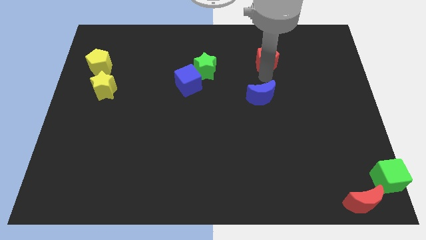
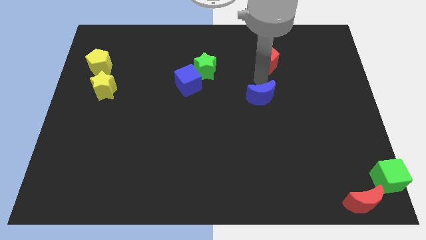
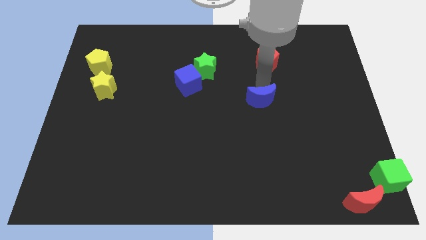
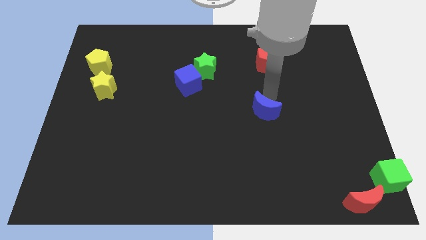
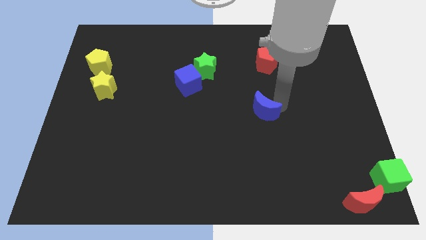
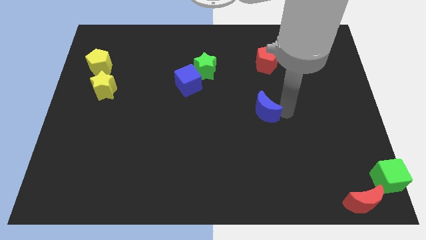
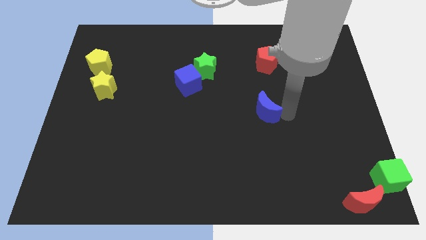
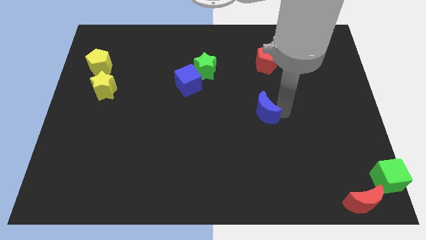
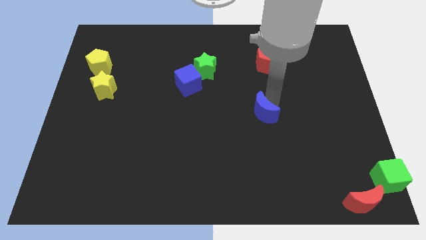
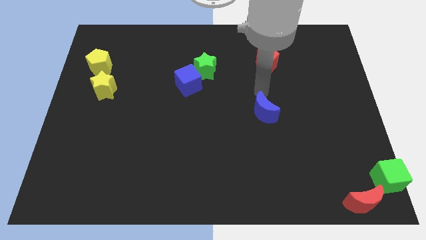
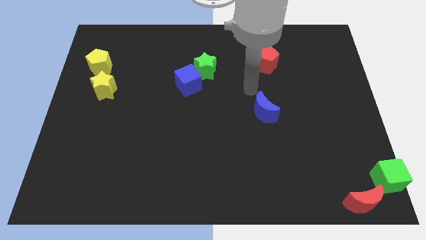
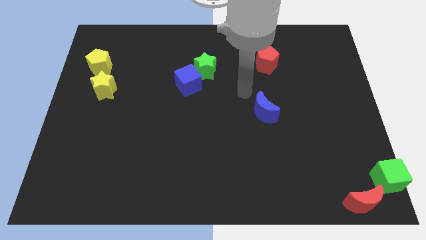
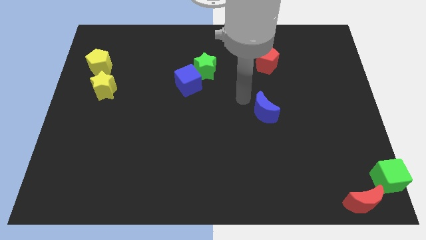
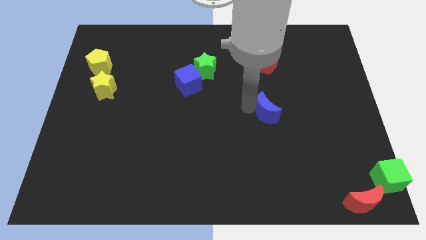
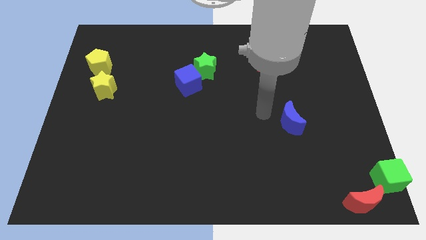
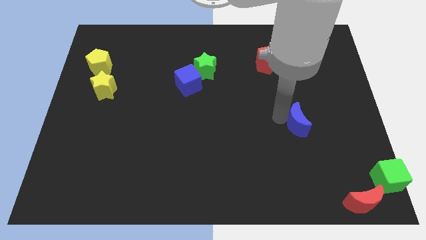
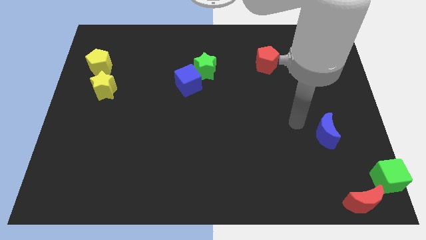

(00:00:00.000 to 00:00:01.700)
move the blue crescent diagnoal to the green cube

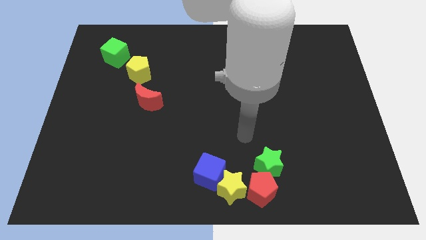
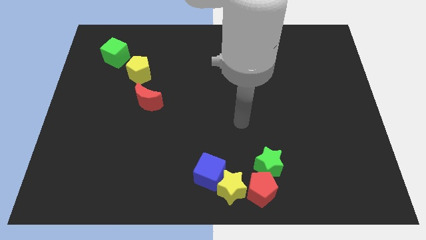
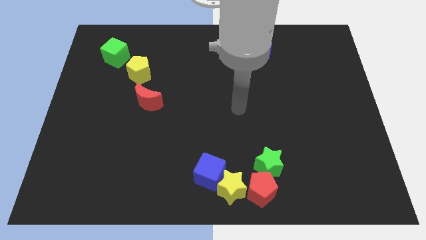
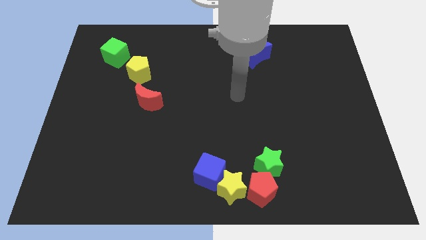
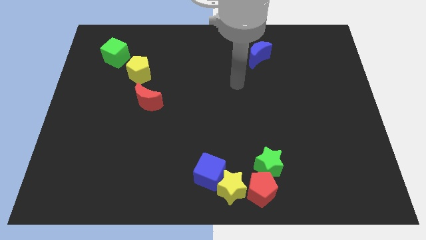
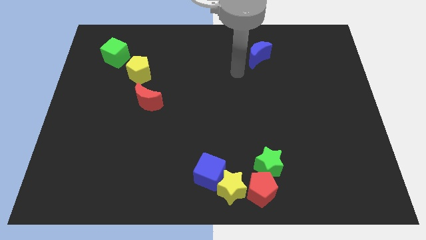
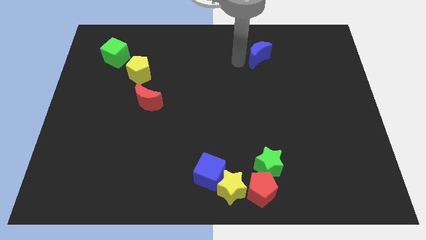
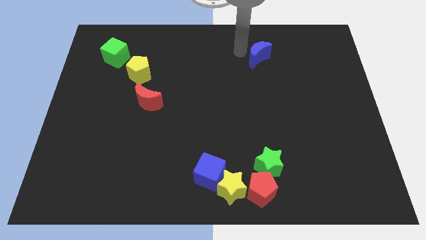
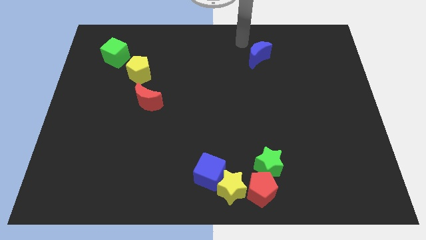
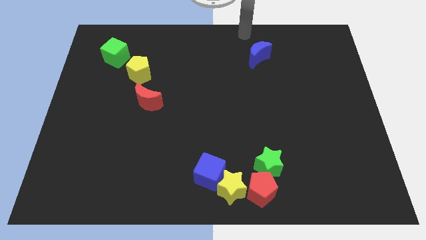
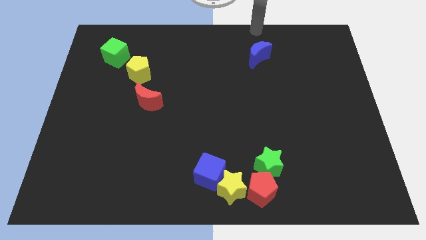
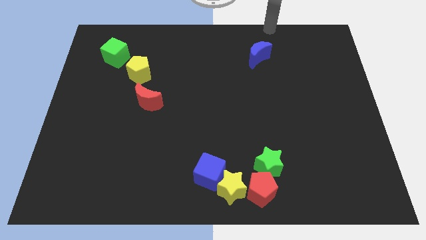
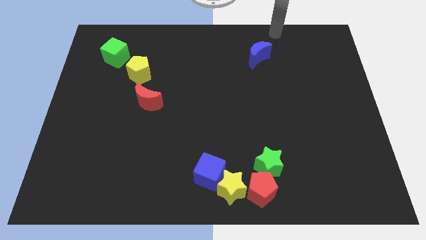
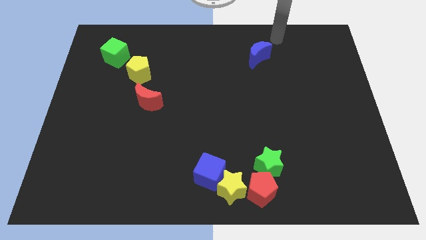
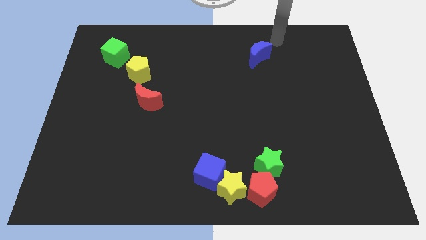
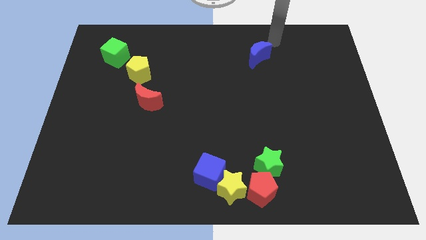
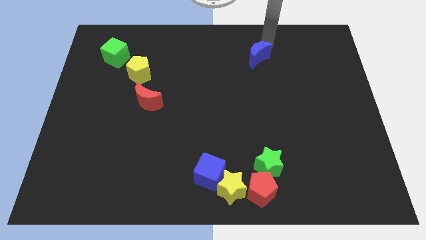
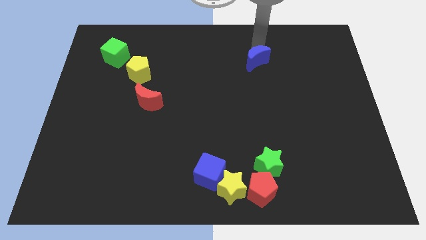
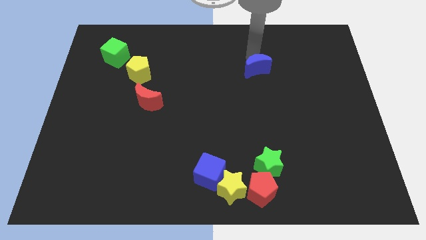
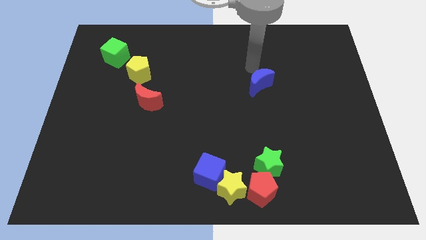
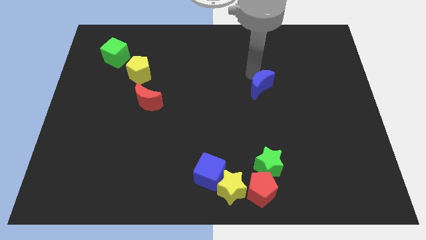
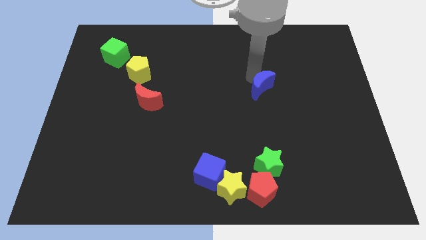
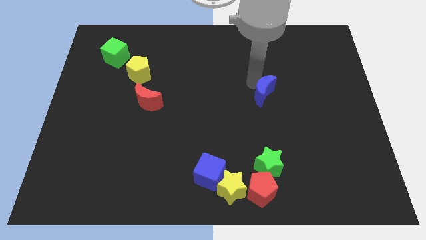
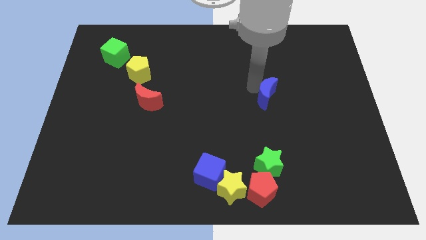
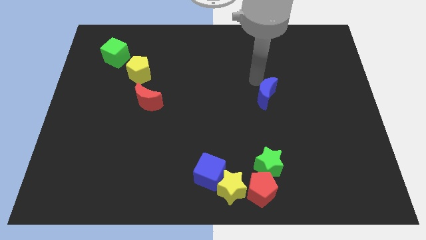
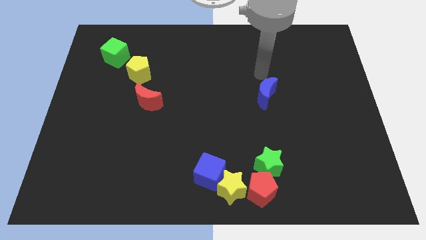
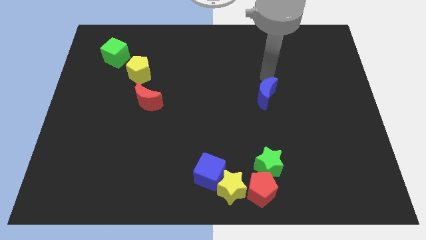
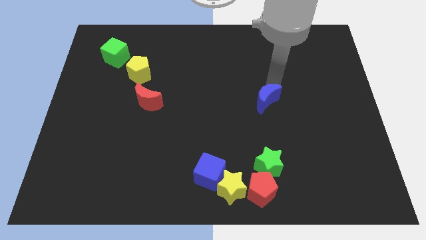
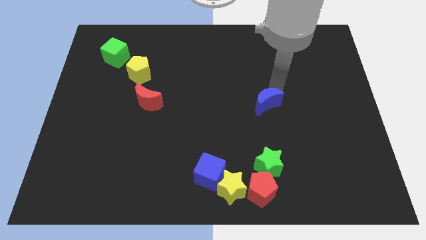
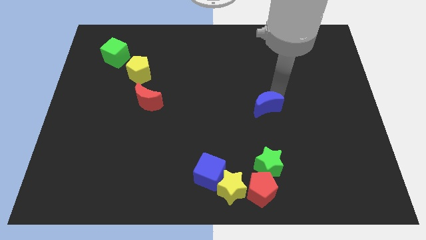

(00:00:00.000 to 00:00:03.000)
place the blue moon to the right of the red crescent

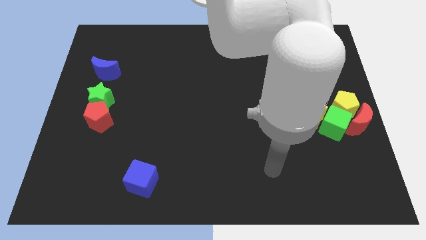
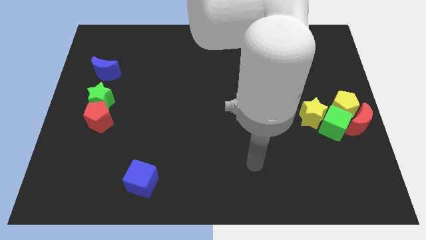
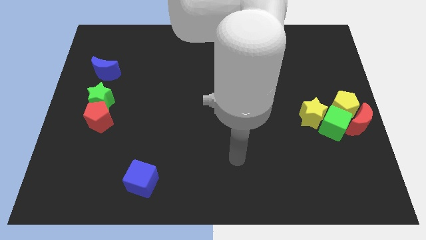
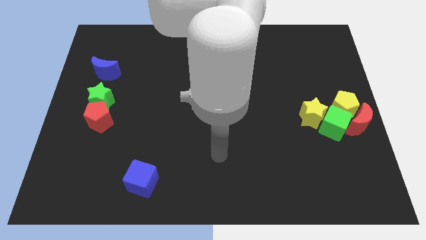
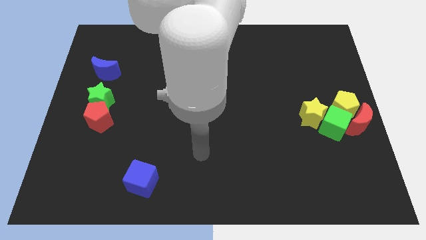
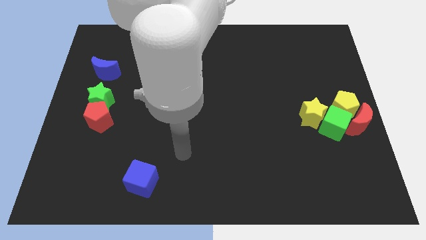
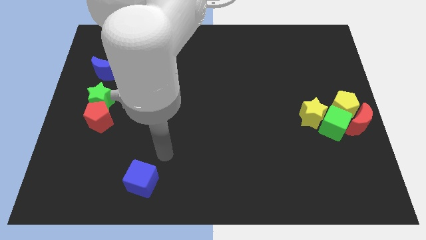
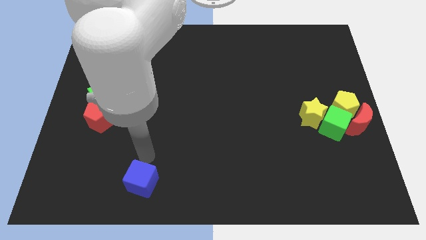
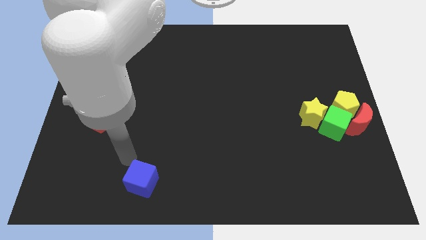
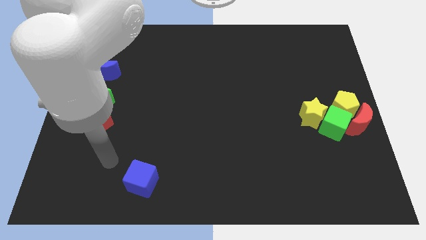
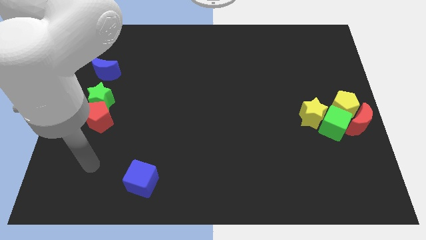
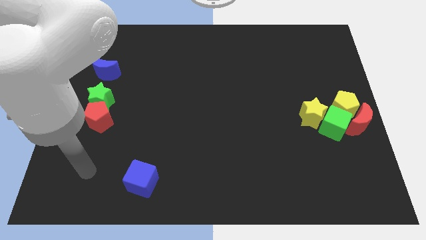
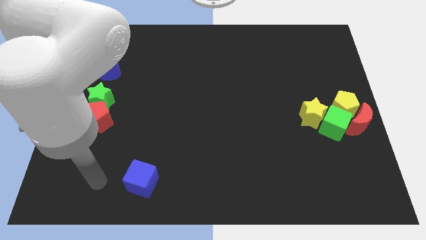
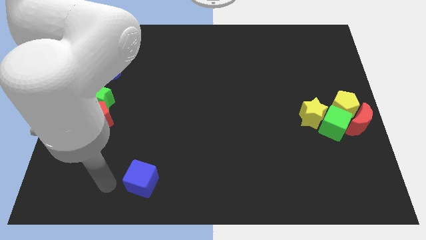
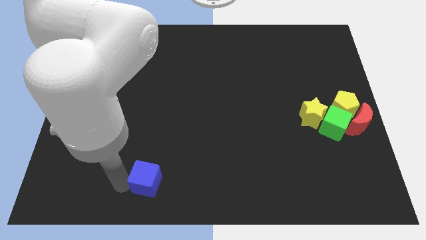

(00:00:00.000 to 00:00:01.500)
place your hand to the left of the blue cube

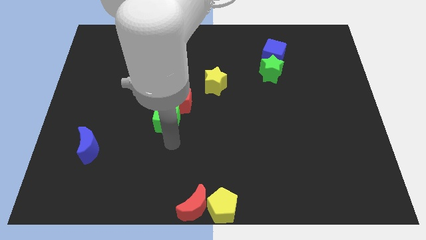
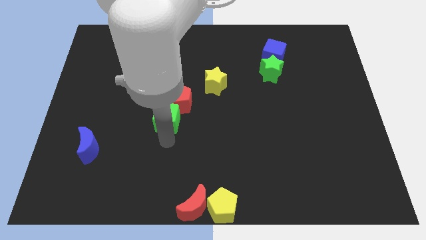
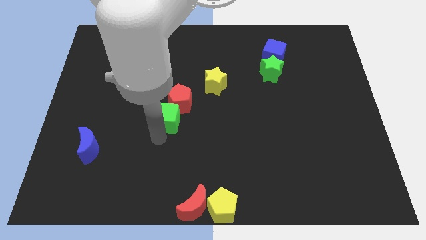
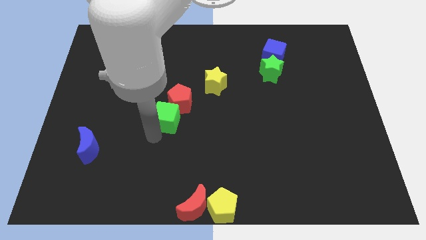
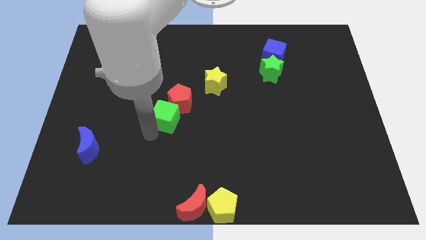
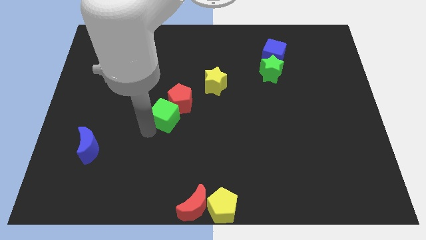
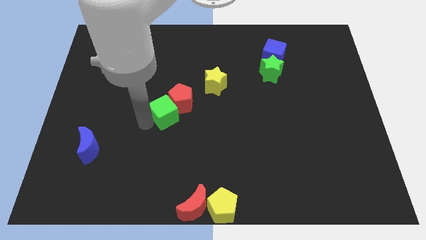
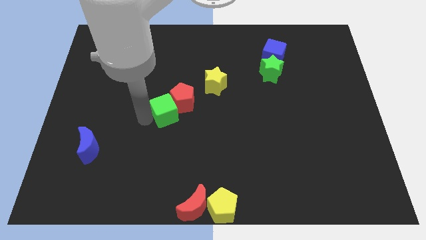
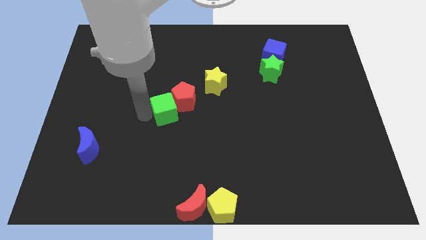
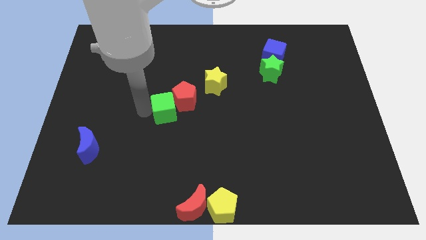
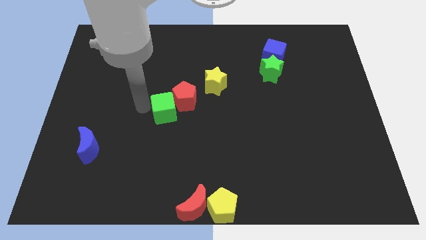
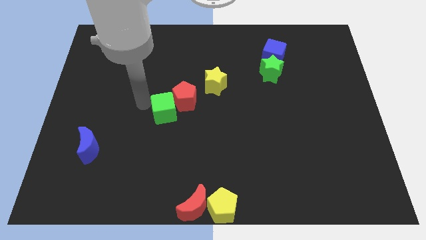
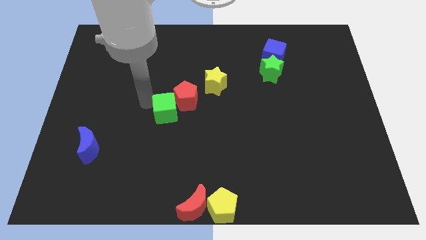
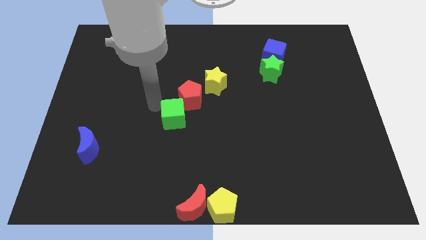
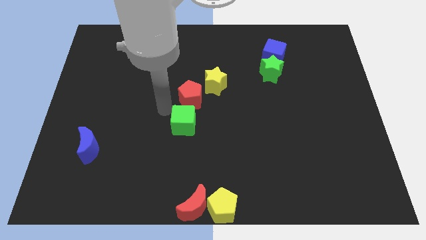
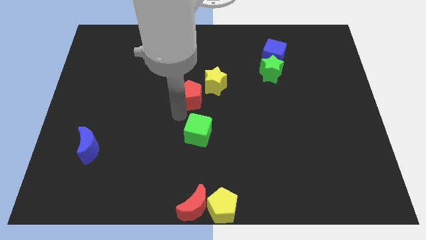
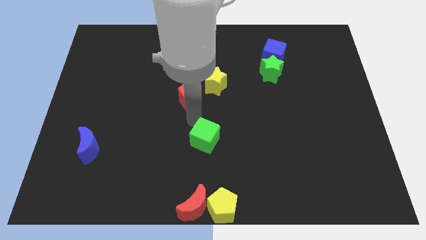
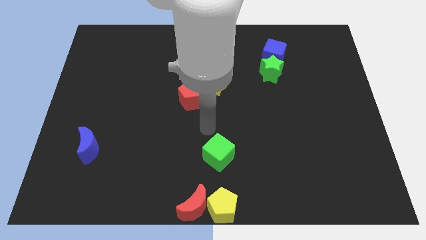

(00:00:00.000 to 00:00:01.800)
separate green cube from the red pentagon

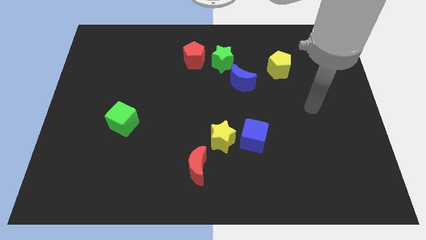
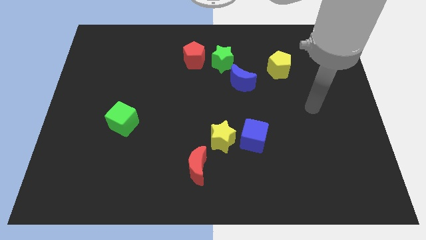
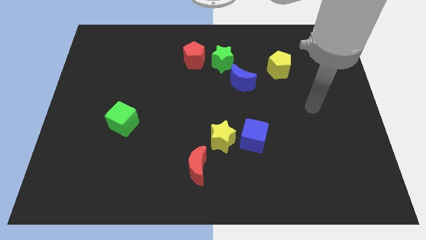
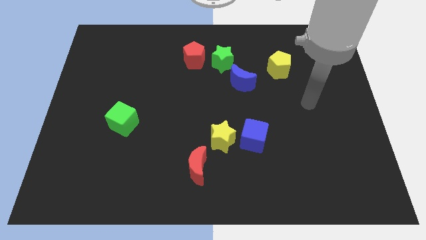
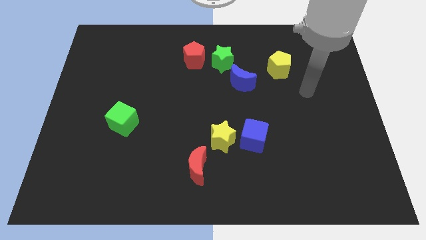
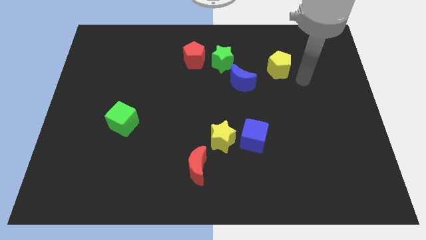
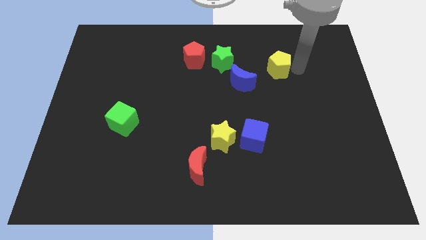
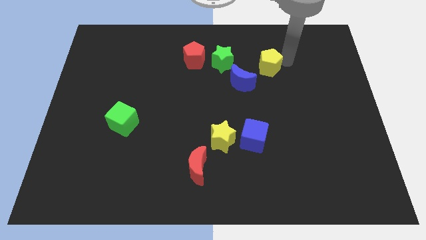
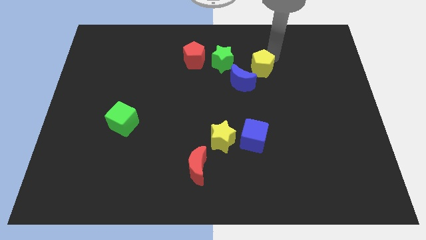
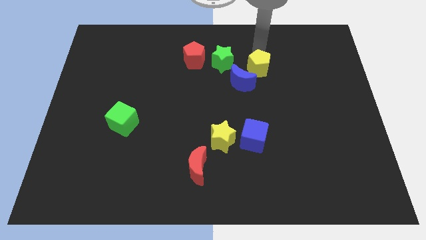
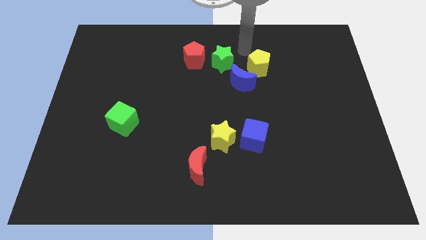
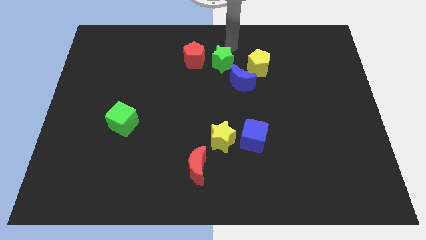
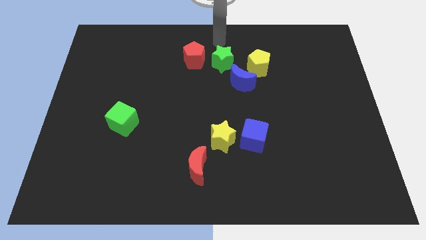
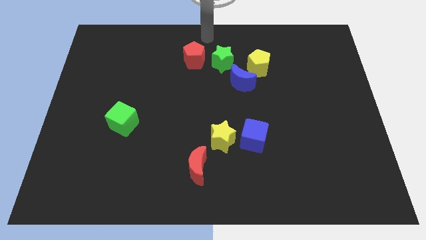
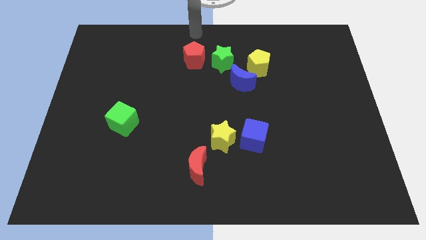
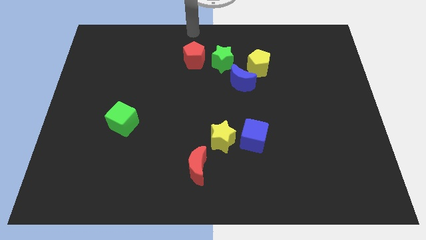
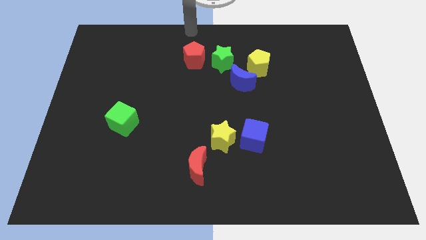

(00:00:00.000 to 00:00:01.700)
point your arm above the red pentagon
